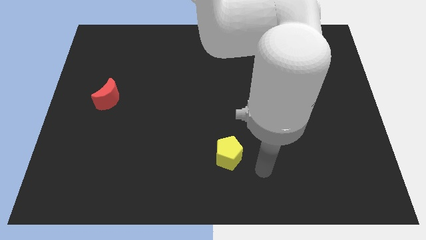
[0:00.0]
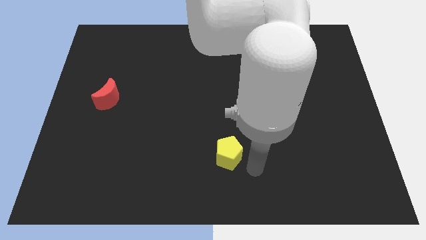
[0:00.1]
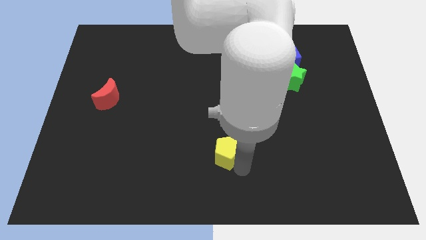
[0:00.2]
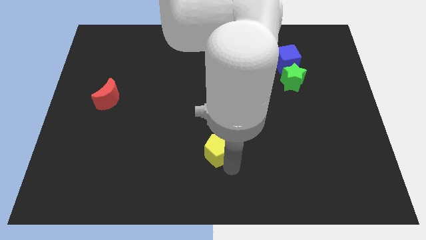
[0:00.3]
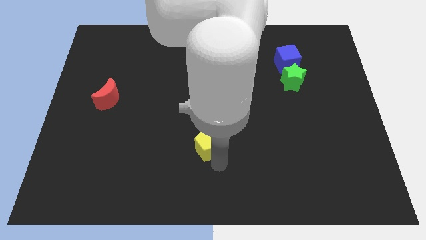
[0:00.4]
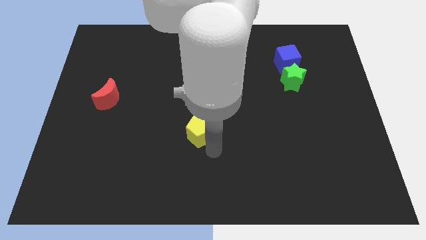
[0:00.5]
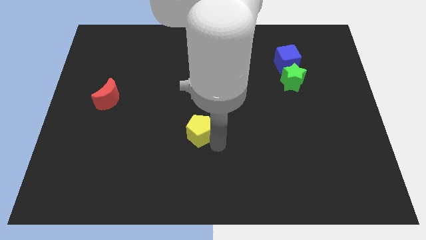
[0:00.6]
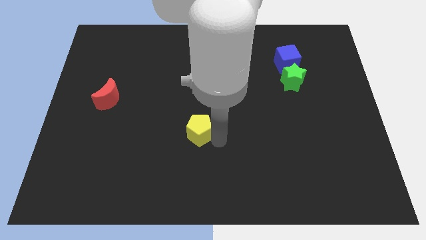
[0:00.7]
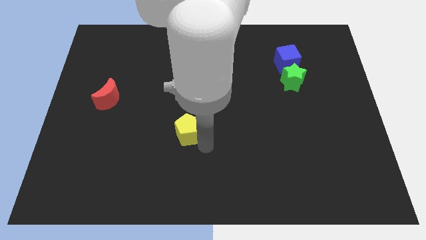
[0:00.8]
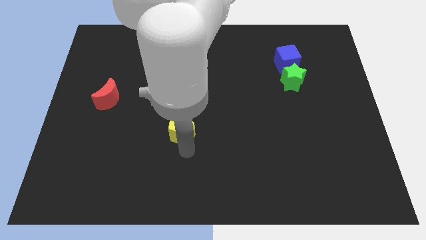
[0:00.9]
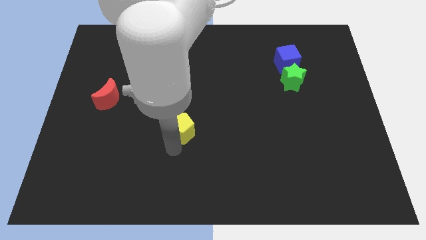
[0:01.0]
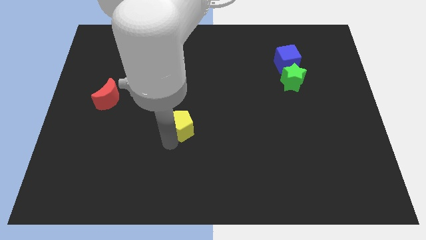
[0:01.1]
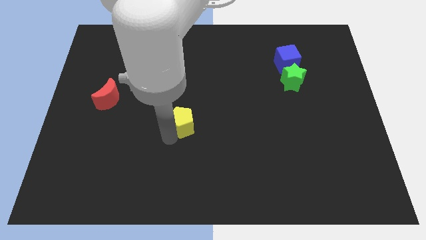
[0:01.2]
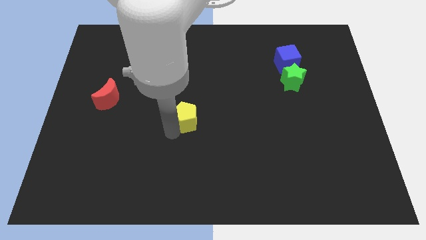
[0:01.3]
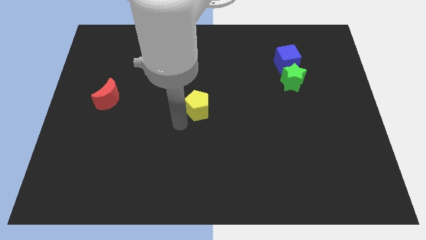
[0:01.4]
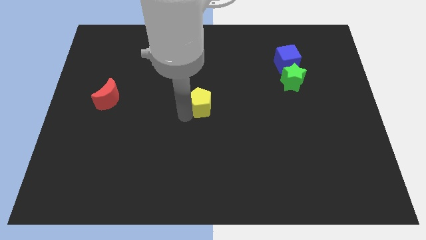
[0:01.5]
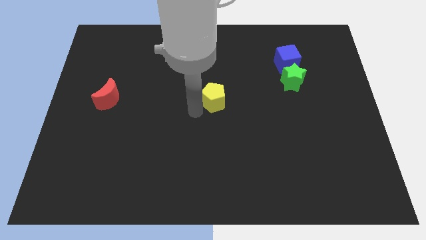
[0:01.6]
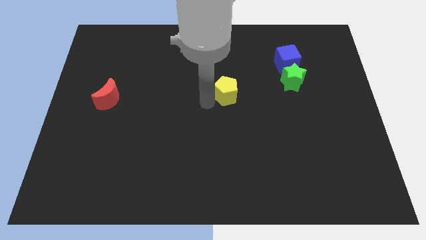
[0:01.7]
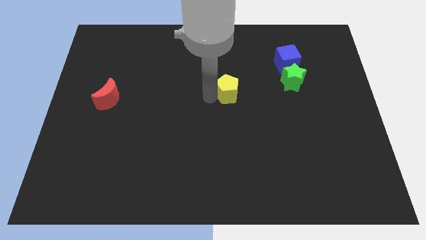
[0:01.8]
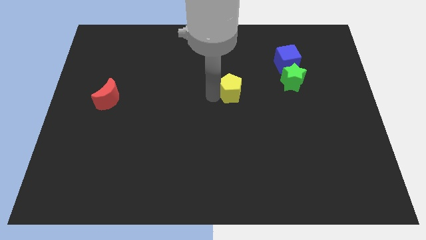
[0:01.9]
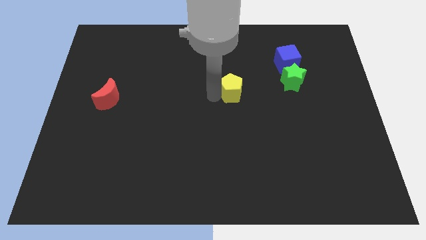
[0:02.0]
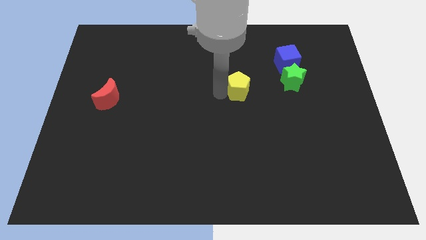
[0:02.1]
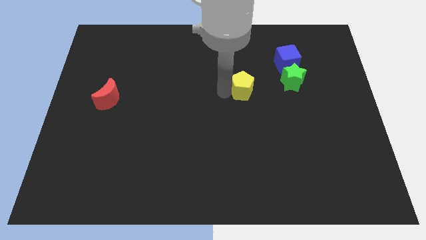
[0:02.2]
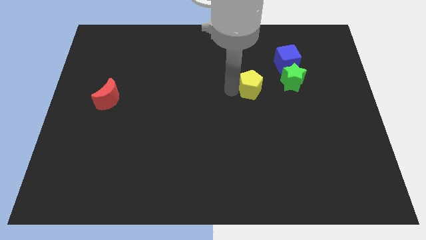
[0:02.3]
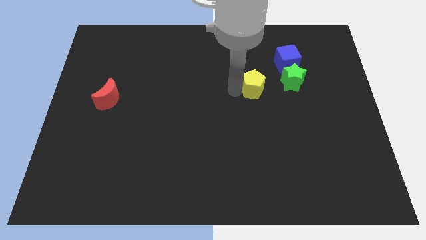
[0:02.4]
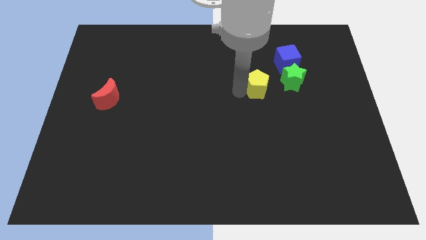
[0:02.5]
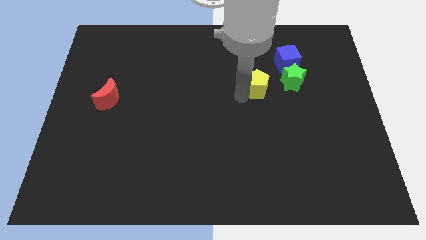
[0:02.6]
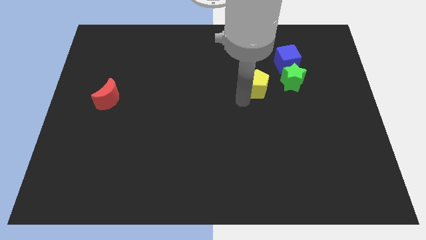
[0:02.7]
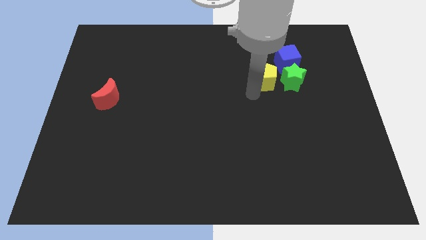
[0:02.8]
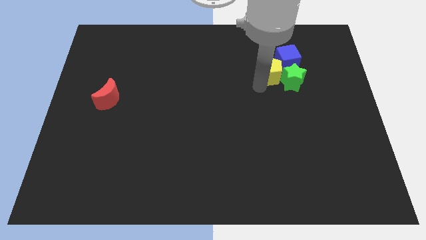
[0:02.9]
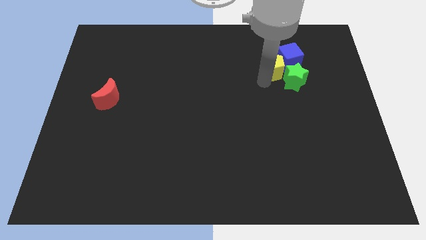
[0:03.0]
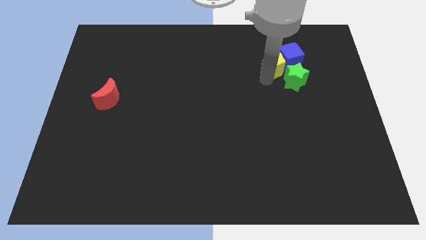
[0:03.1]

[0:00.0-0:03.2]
put the yellow block close to the blue block

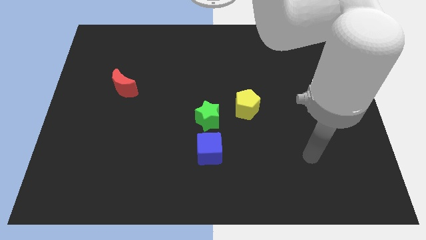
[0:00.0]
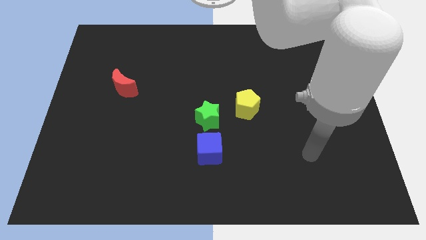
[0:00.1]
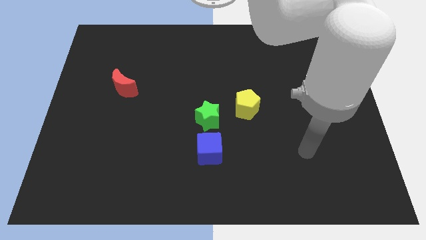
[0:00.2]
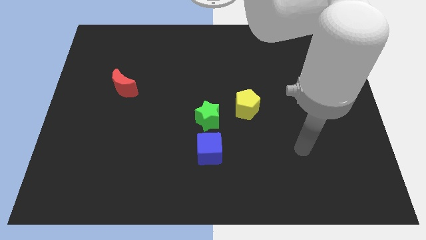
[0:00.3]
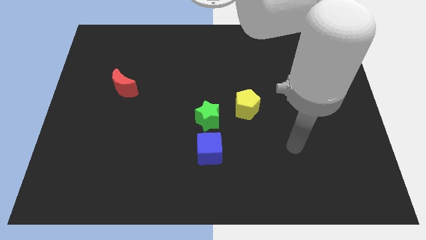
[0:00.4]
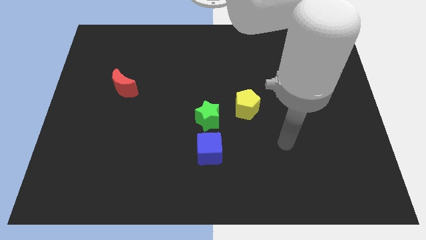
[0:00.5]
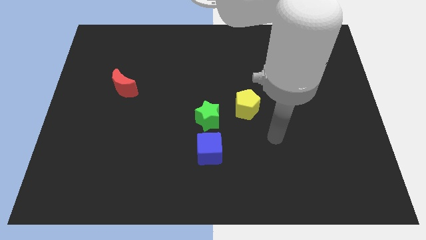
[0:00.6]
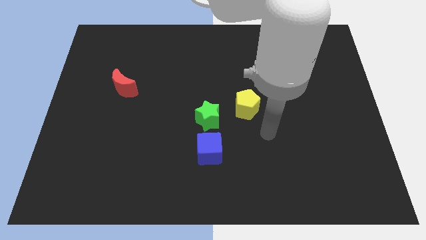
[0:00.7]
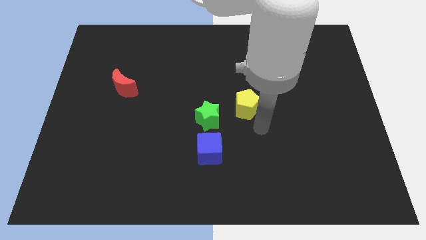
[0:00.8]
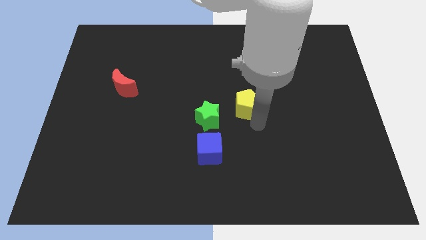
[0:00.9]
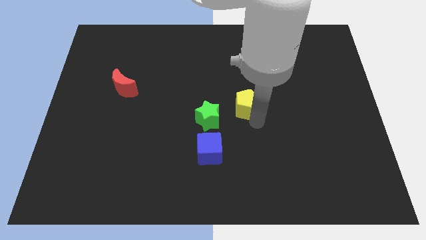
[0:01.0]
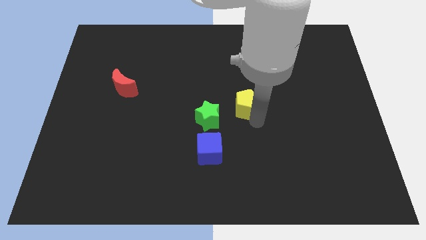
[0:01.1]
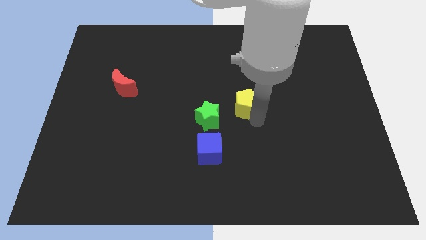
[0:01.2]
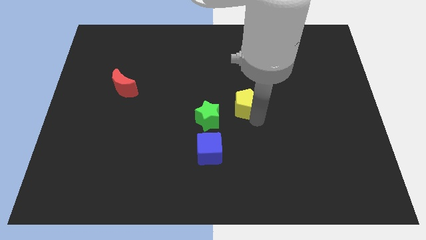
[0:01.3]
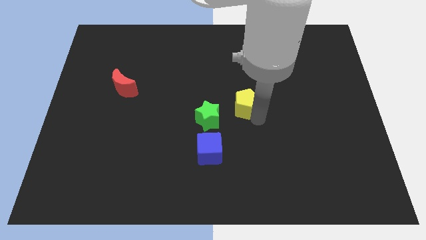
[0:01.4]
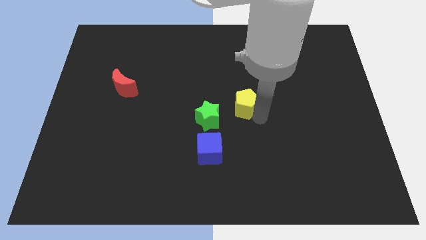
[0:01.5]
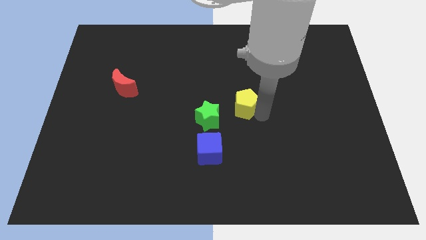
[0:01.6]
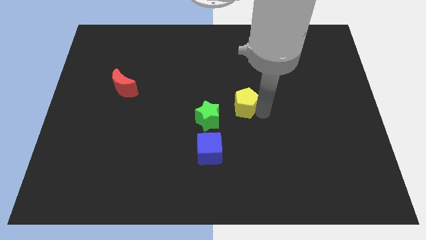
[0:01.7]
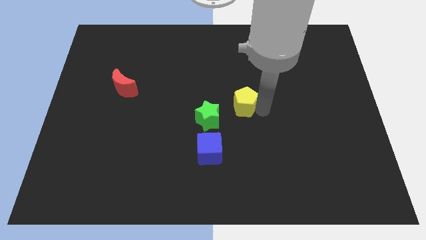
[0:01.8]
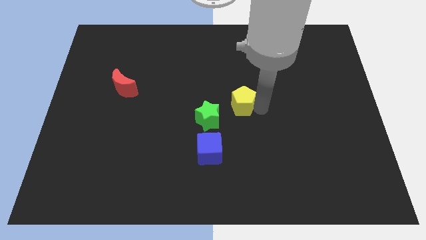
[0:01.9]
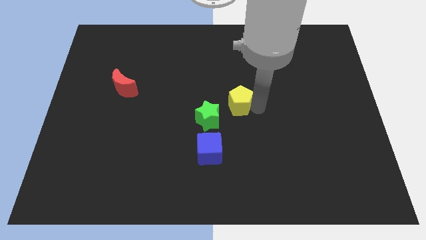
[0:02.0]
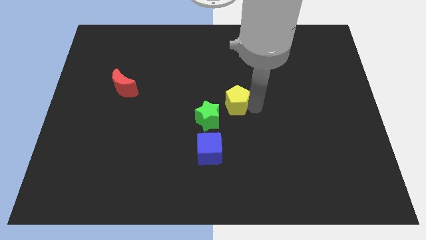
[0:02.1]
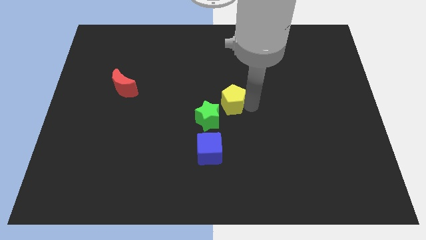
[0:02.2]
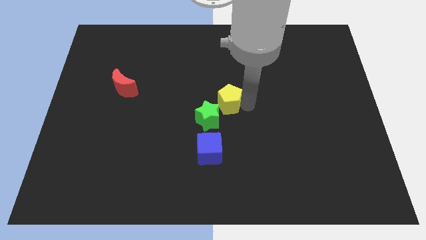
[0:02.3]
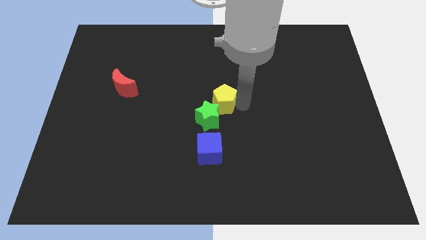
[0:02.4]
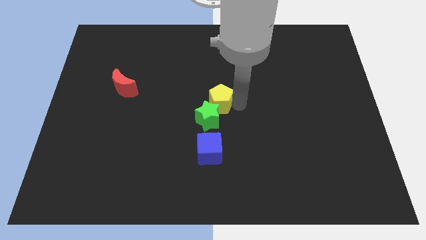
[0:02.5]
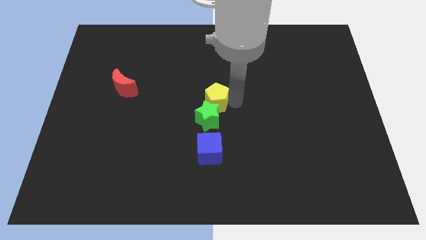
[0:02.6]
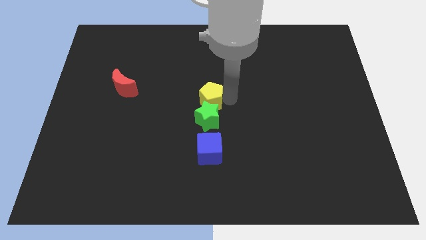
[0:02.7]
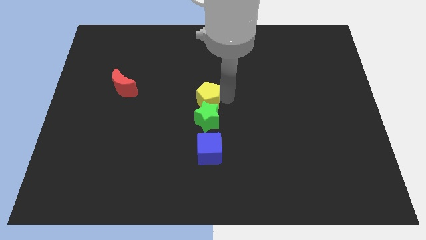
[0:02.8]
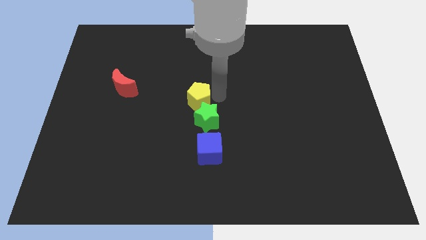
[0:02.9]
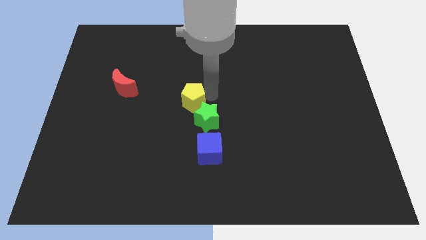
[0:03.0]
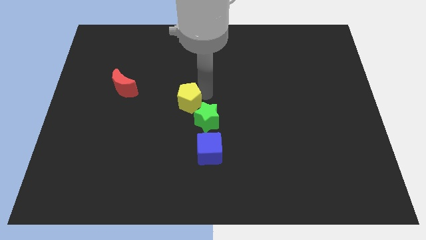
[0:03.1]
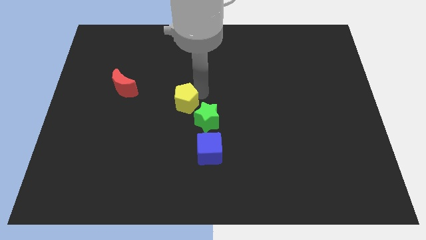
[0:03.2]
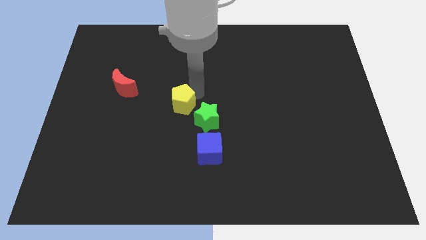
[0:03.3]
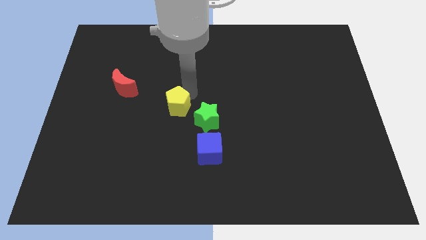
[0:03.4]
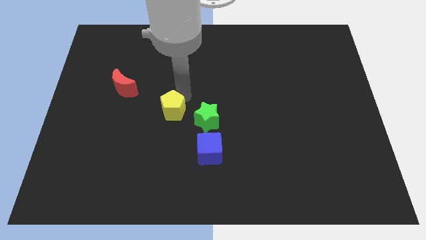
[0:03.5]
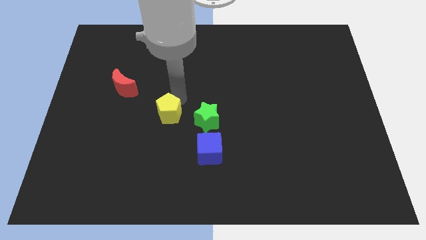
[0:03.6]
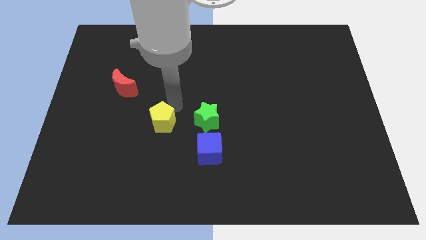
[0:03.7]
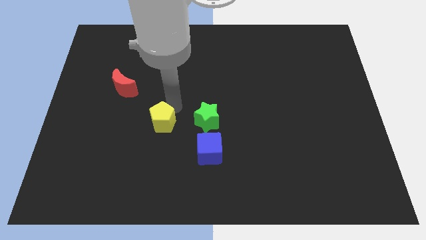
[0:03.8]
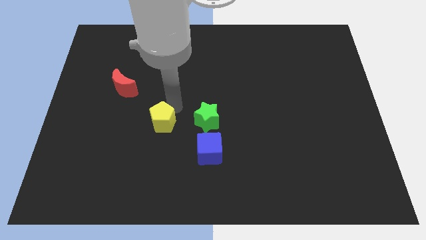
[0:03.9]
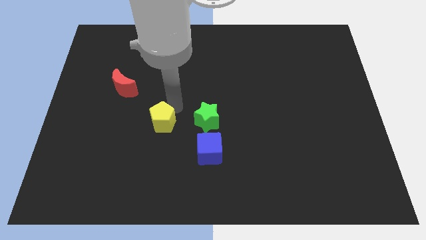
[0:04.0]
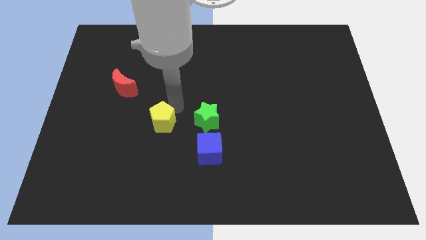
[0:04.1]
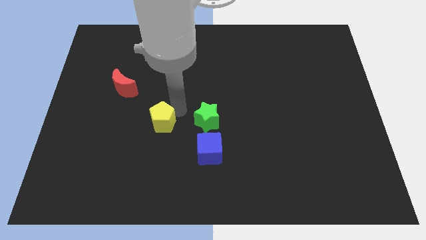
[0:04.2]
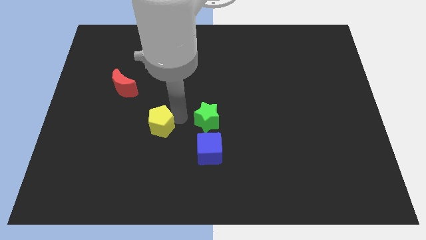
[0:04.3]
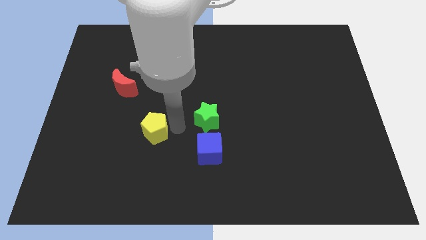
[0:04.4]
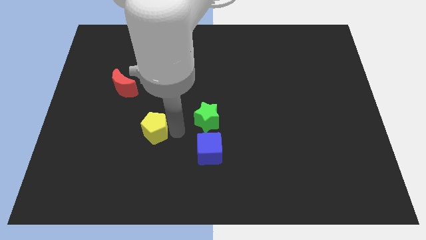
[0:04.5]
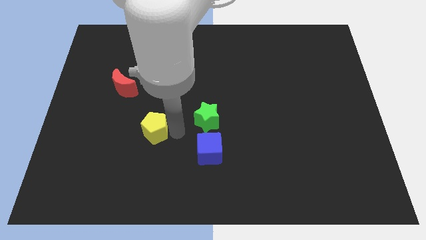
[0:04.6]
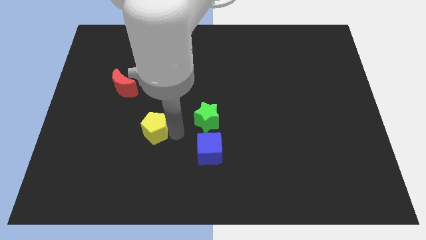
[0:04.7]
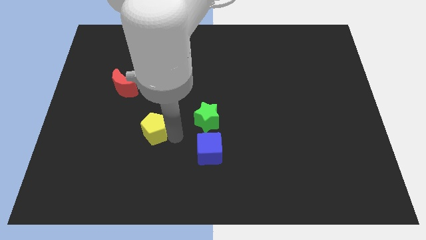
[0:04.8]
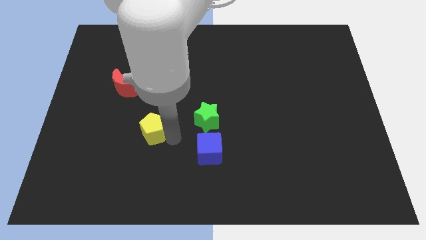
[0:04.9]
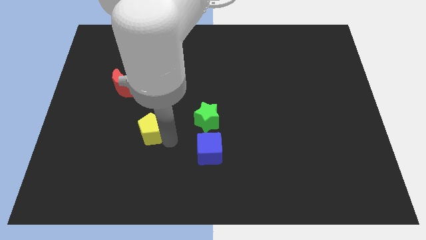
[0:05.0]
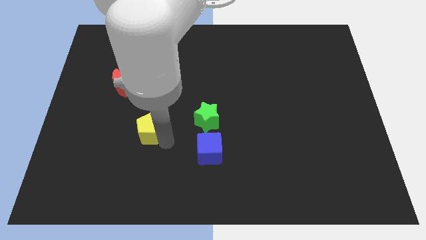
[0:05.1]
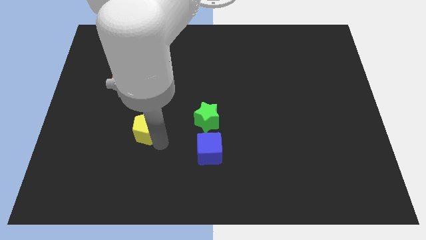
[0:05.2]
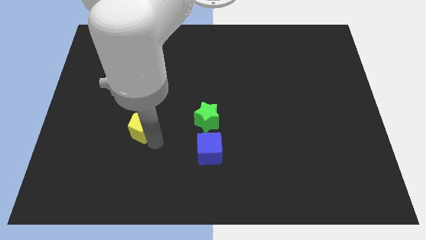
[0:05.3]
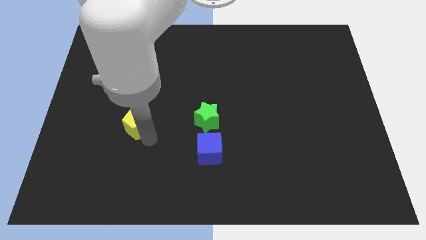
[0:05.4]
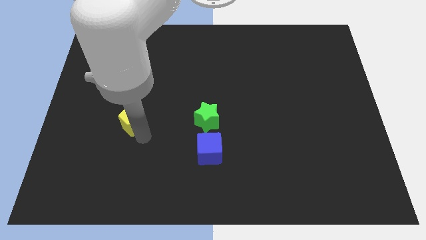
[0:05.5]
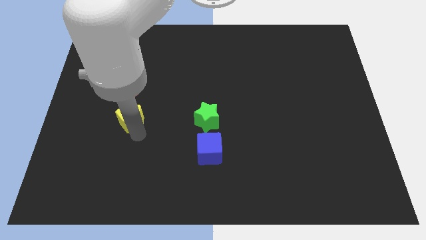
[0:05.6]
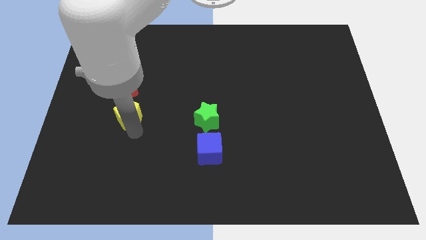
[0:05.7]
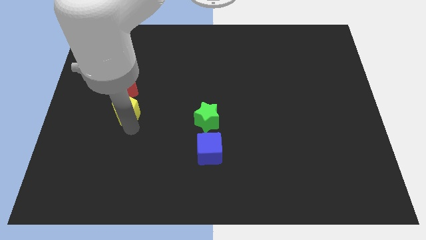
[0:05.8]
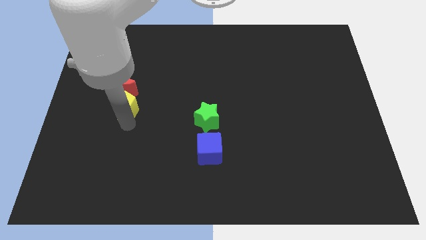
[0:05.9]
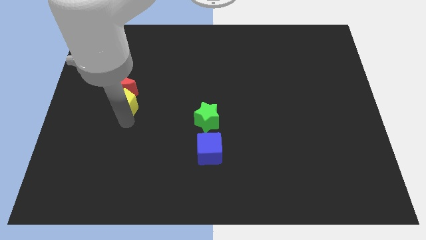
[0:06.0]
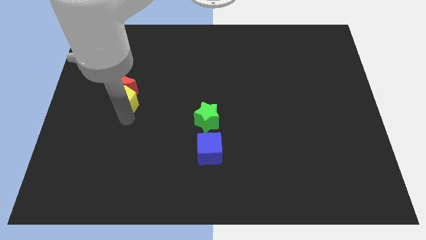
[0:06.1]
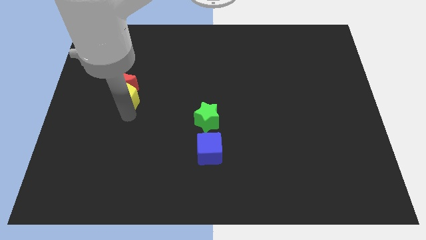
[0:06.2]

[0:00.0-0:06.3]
put the pentagon to the red block
